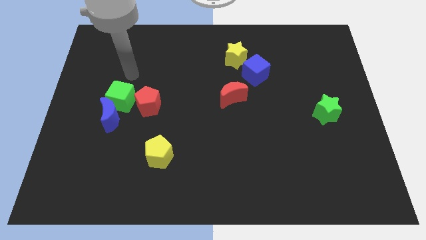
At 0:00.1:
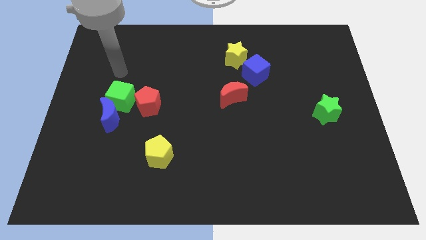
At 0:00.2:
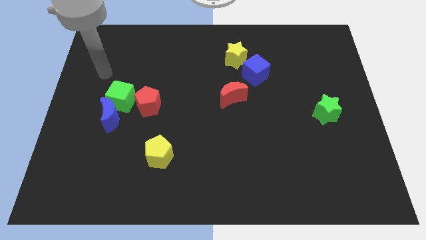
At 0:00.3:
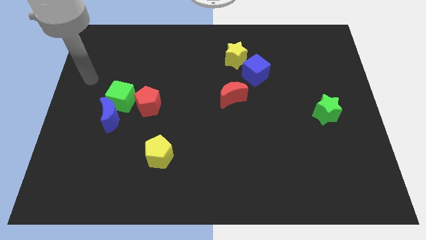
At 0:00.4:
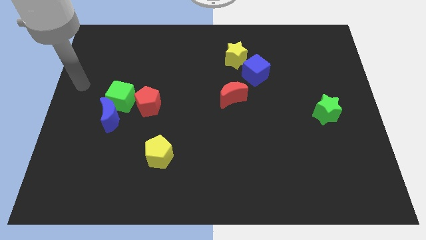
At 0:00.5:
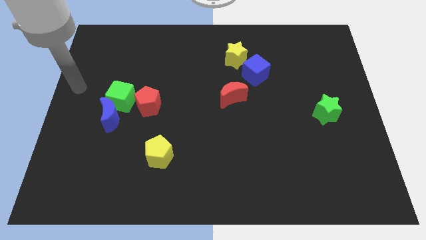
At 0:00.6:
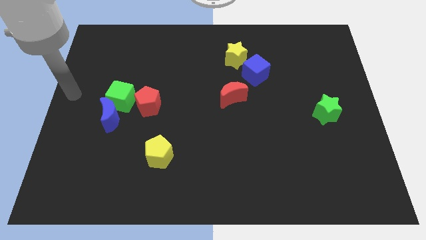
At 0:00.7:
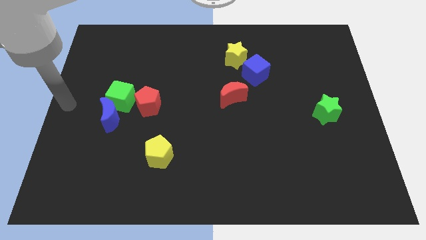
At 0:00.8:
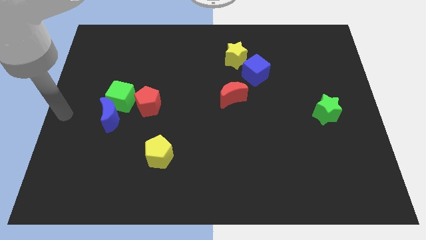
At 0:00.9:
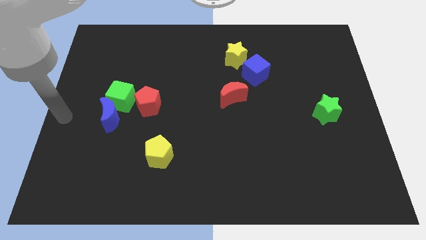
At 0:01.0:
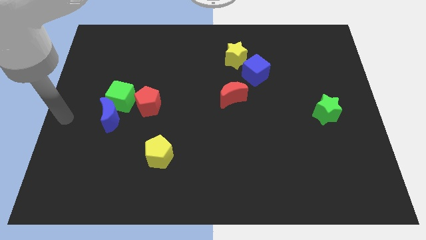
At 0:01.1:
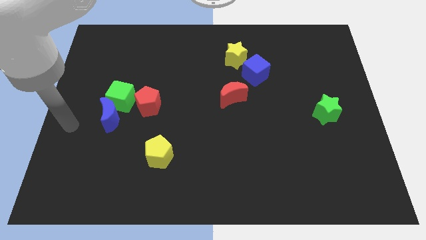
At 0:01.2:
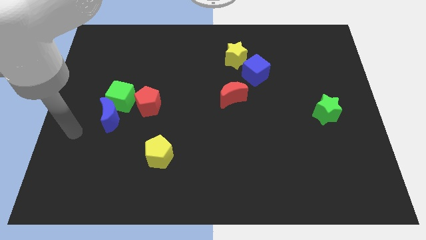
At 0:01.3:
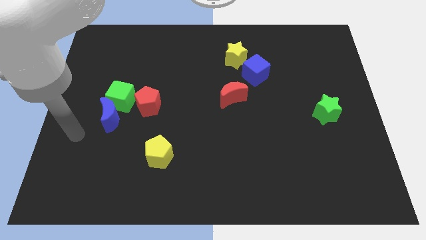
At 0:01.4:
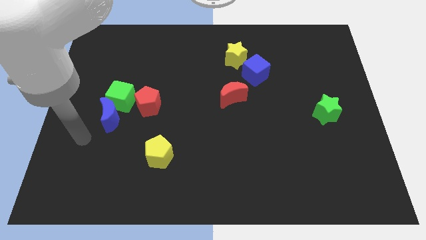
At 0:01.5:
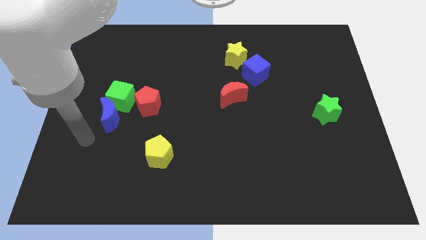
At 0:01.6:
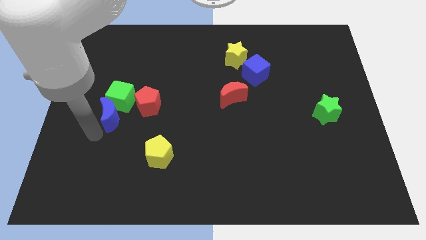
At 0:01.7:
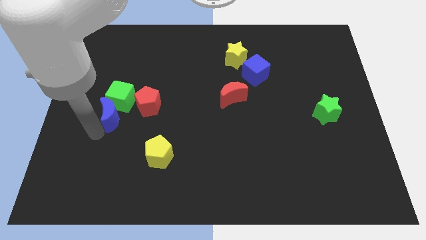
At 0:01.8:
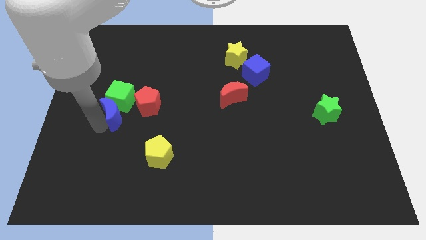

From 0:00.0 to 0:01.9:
move arm left below the blue moon

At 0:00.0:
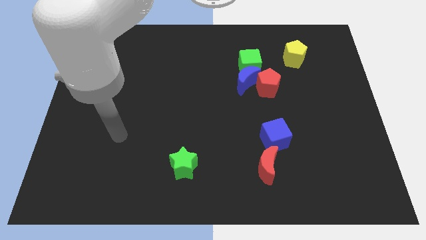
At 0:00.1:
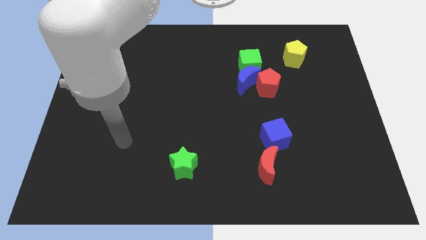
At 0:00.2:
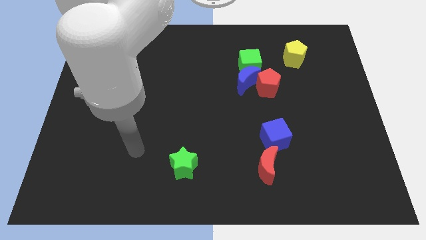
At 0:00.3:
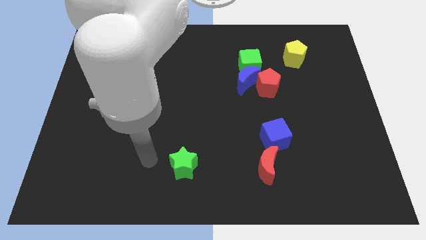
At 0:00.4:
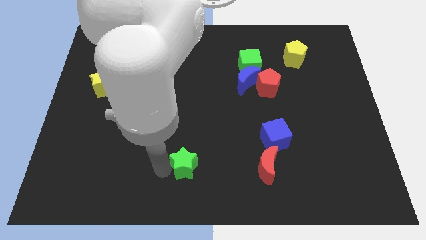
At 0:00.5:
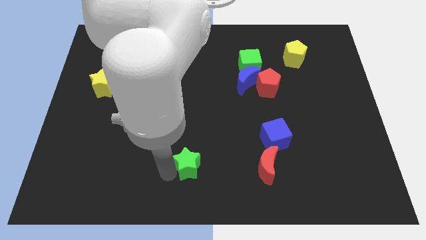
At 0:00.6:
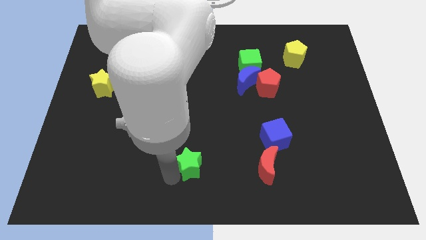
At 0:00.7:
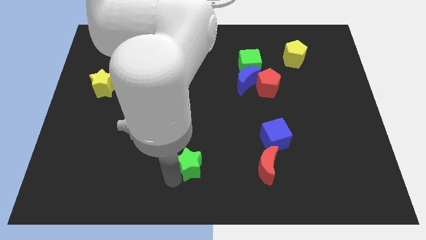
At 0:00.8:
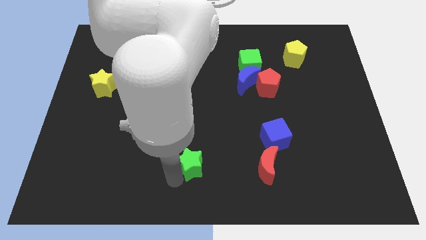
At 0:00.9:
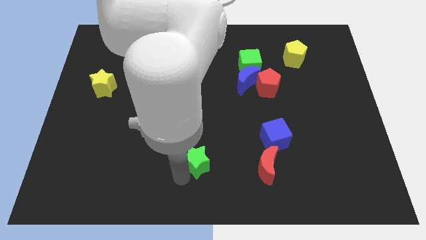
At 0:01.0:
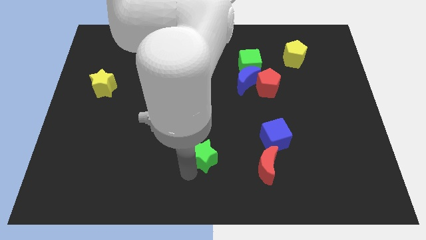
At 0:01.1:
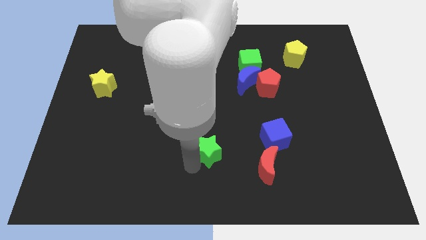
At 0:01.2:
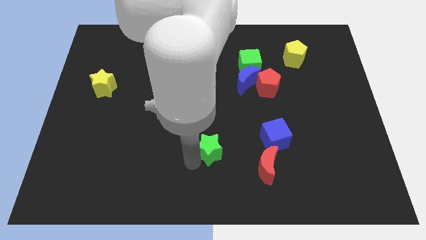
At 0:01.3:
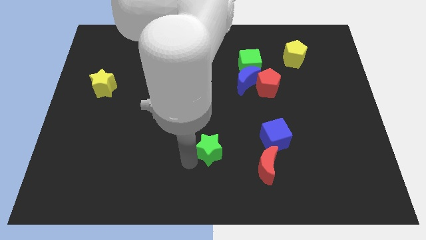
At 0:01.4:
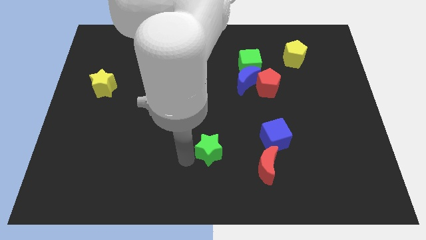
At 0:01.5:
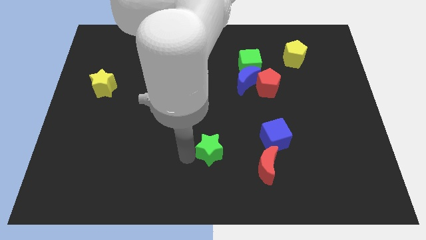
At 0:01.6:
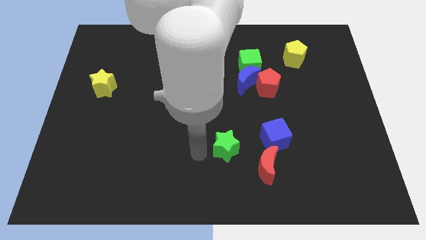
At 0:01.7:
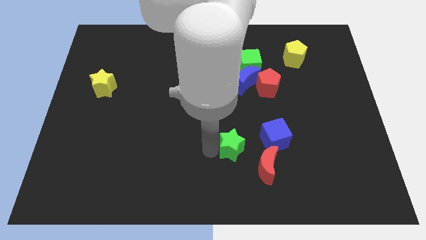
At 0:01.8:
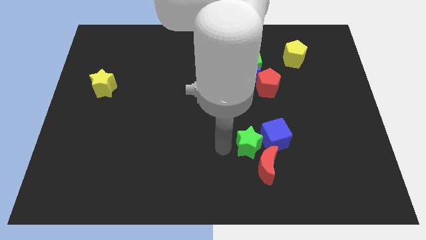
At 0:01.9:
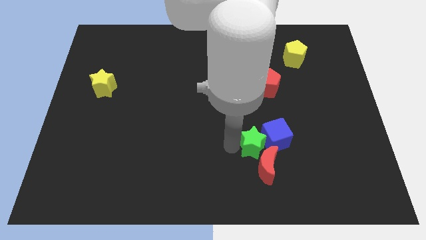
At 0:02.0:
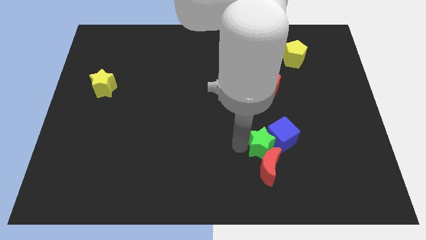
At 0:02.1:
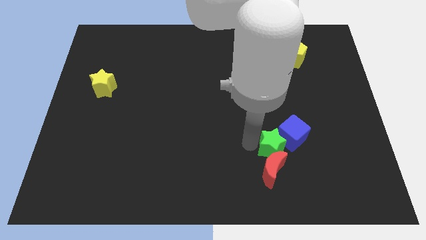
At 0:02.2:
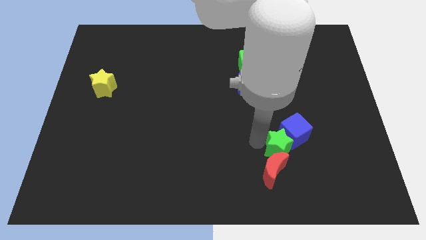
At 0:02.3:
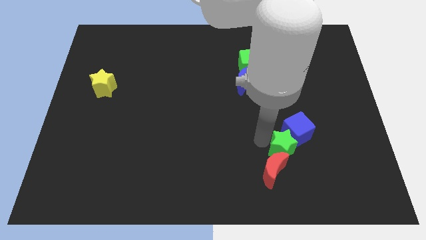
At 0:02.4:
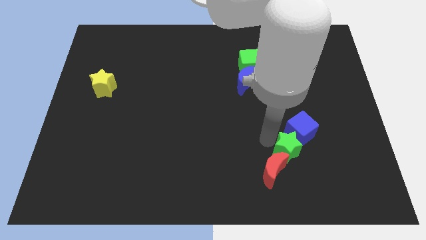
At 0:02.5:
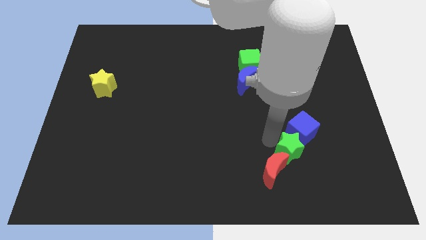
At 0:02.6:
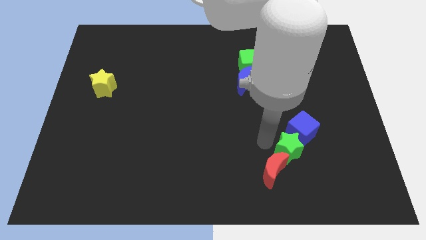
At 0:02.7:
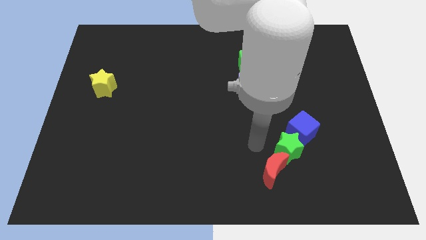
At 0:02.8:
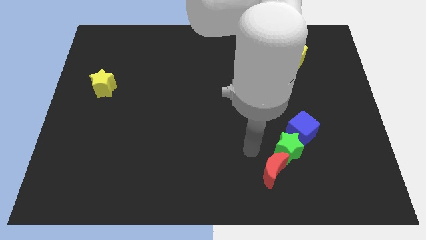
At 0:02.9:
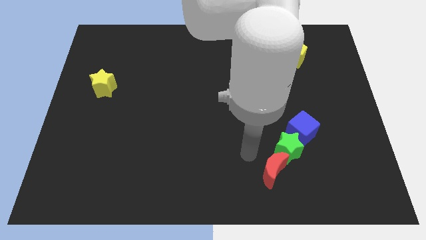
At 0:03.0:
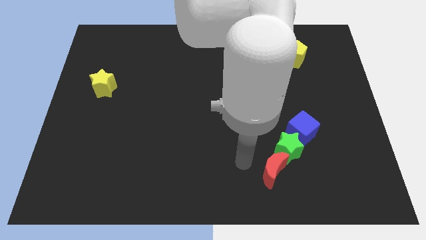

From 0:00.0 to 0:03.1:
push the green star and blue cube to the top side of the red moon

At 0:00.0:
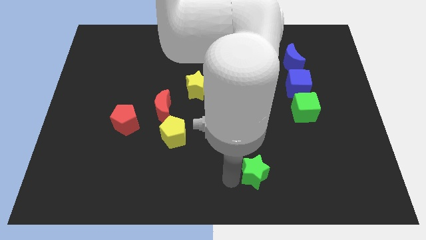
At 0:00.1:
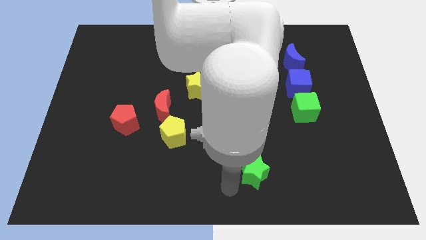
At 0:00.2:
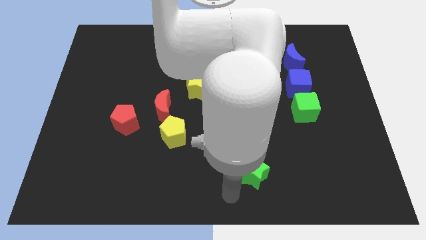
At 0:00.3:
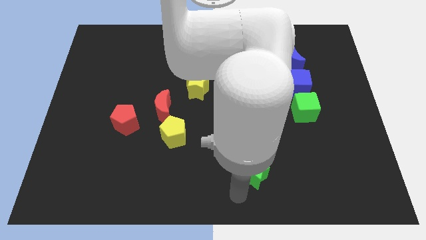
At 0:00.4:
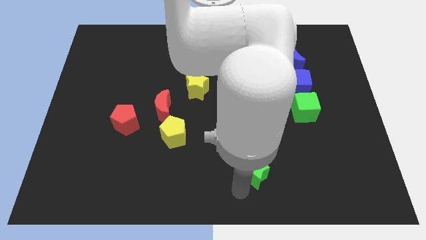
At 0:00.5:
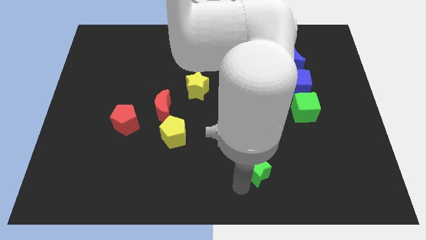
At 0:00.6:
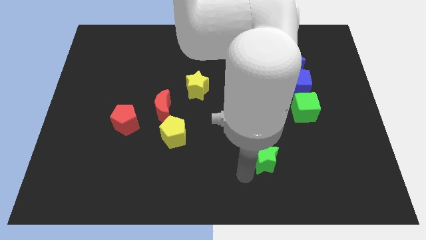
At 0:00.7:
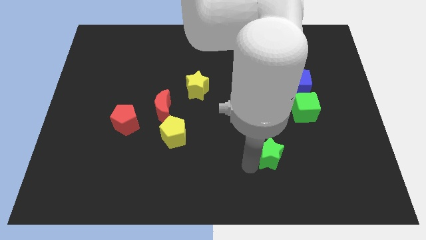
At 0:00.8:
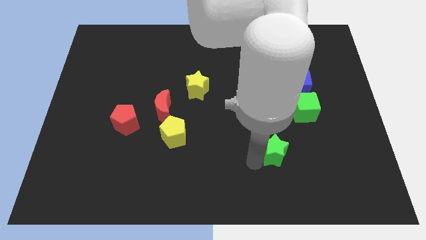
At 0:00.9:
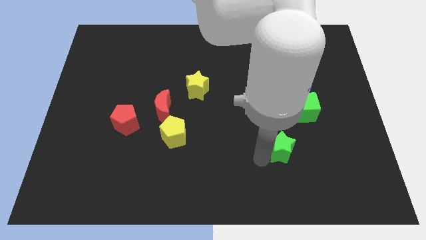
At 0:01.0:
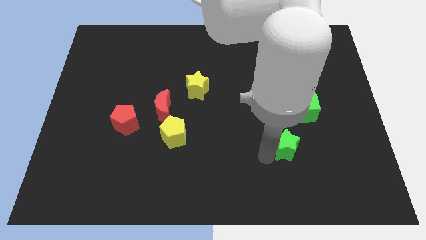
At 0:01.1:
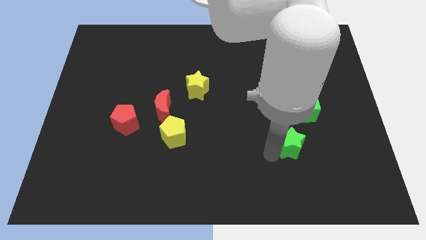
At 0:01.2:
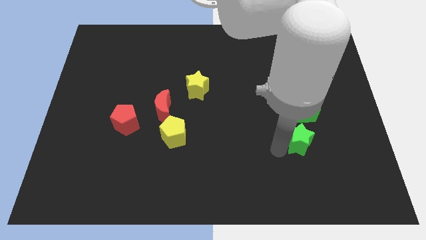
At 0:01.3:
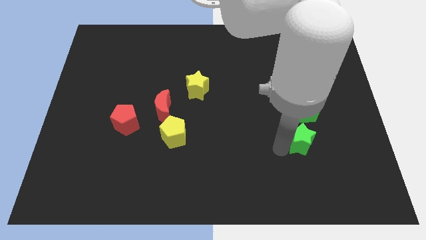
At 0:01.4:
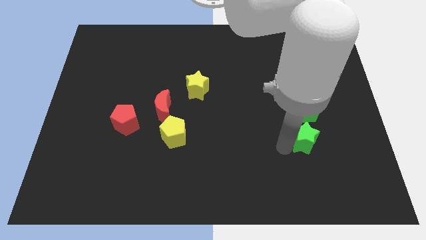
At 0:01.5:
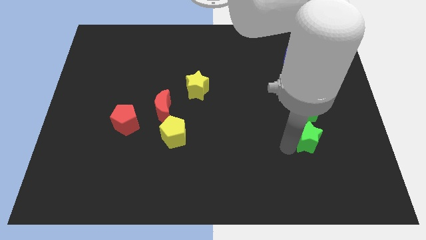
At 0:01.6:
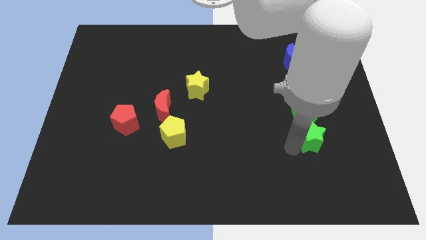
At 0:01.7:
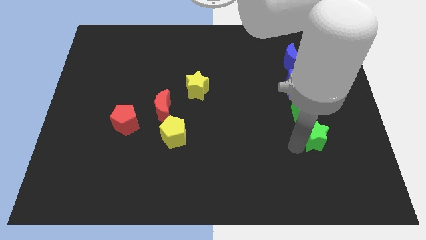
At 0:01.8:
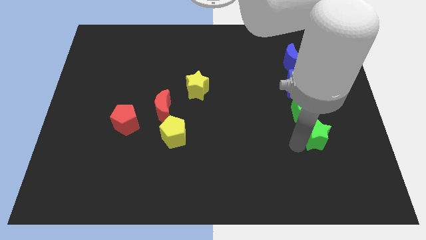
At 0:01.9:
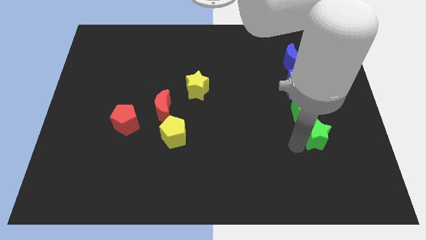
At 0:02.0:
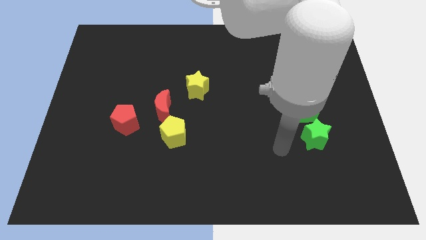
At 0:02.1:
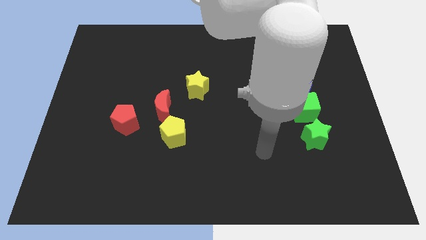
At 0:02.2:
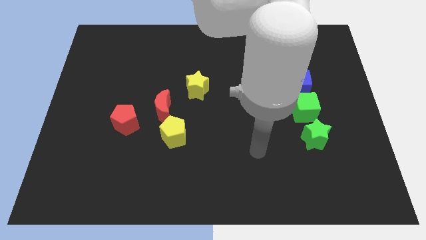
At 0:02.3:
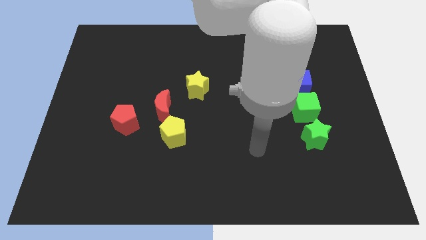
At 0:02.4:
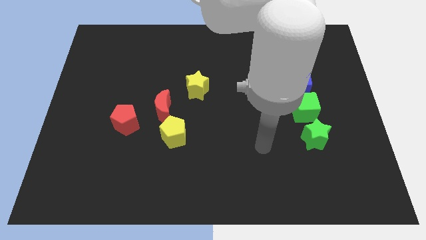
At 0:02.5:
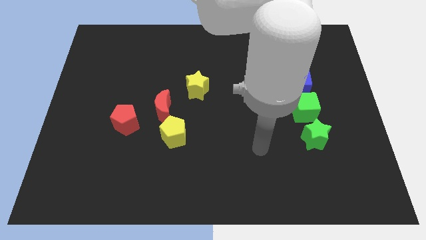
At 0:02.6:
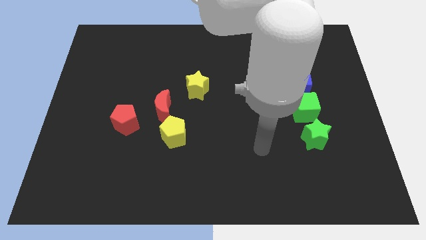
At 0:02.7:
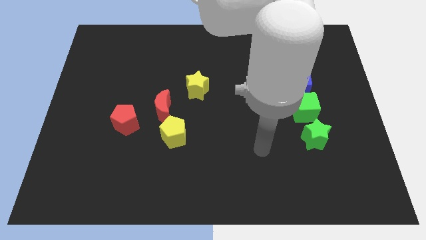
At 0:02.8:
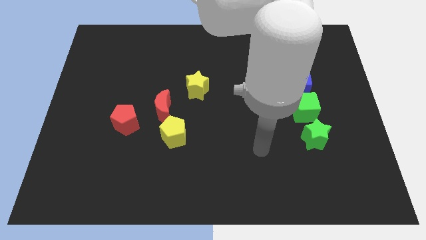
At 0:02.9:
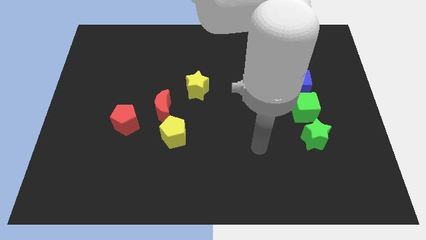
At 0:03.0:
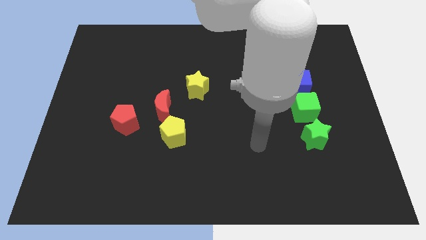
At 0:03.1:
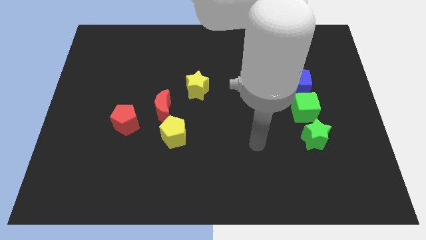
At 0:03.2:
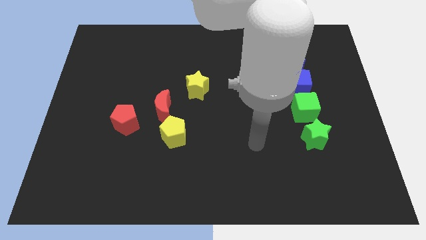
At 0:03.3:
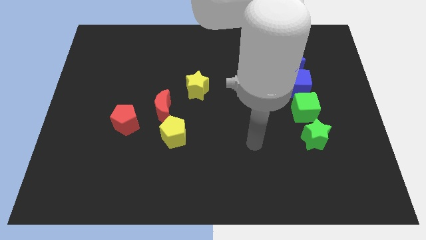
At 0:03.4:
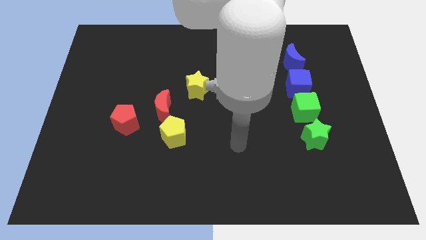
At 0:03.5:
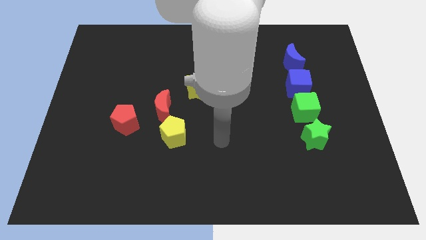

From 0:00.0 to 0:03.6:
push the green star to the bottom side of the green cube
